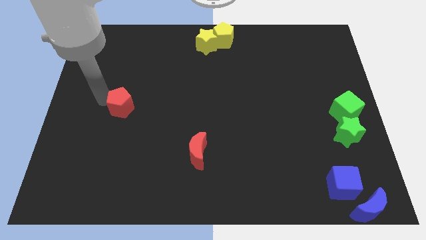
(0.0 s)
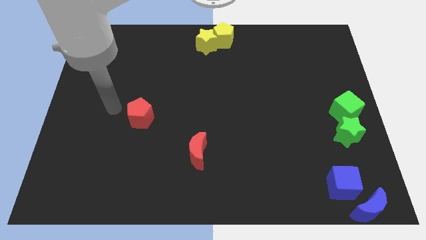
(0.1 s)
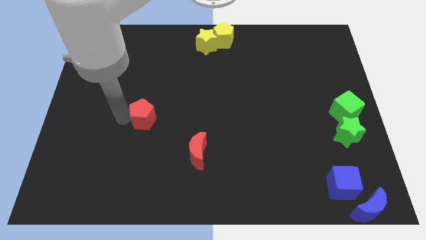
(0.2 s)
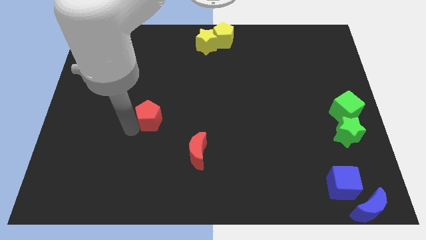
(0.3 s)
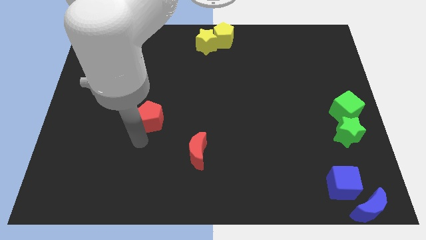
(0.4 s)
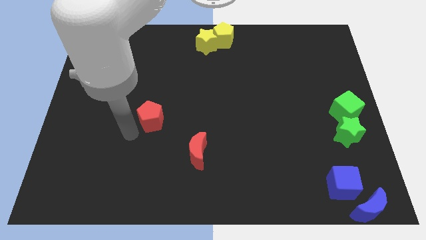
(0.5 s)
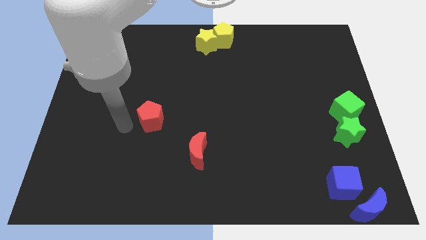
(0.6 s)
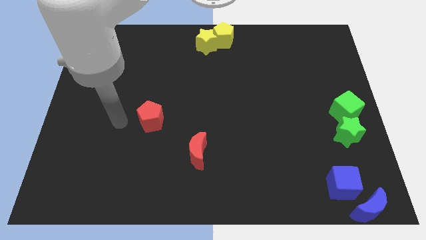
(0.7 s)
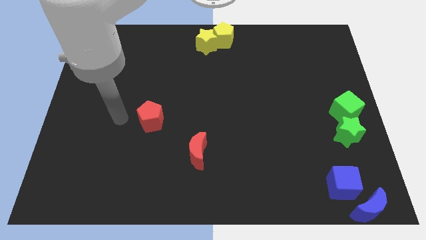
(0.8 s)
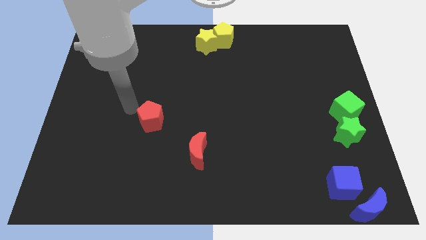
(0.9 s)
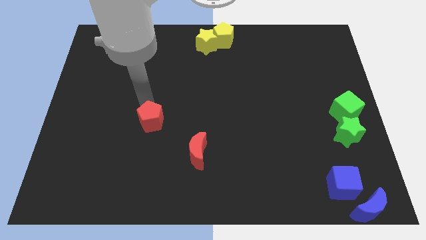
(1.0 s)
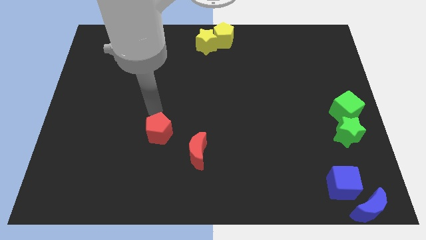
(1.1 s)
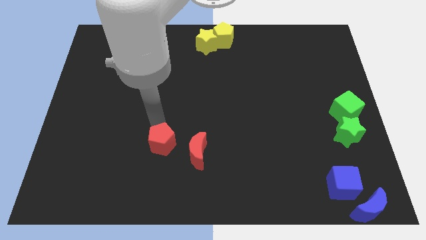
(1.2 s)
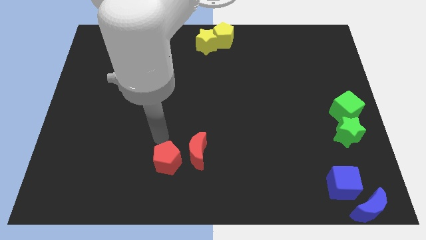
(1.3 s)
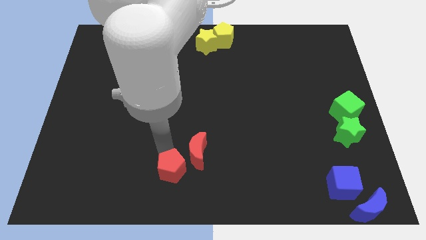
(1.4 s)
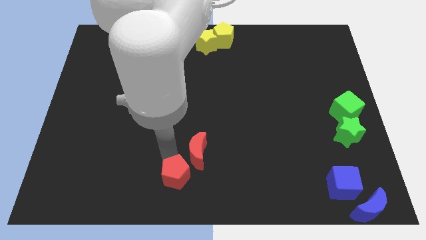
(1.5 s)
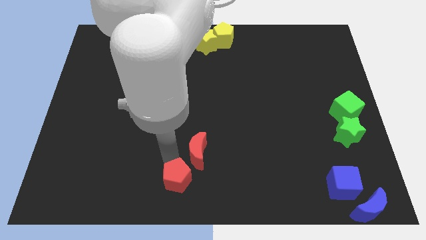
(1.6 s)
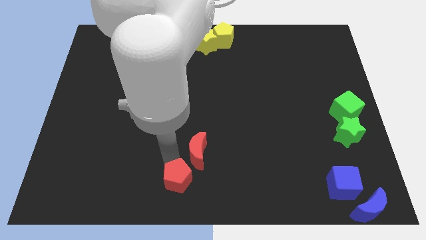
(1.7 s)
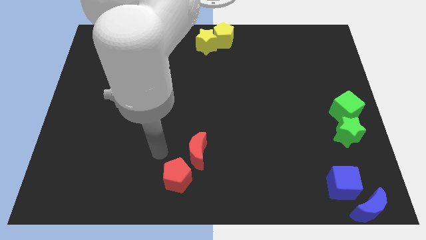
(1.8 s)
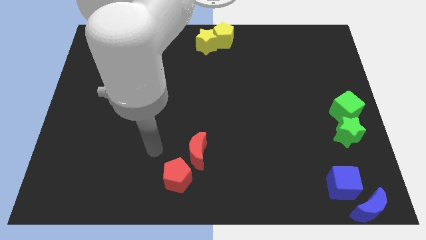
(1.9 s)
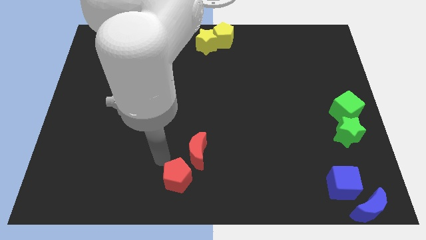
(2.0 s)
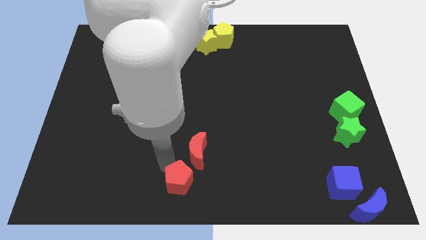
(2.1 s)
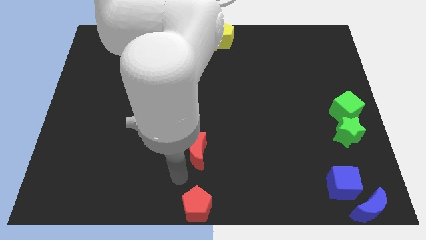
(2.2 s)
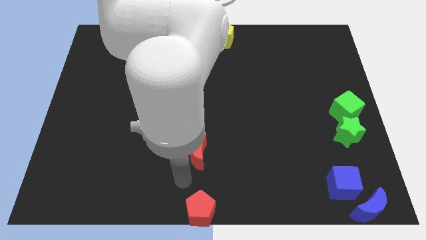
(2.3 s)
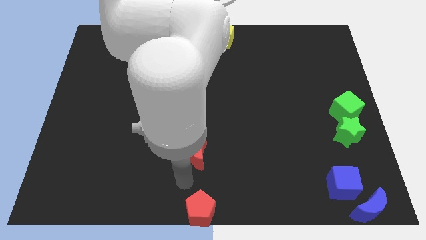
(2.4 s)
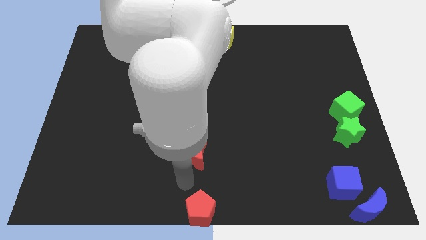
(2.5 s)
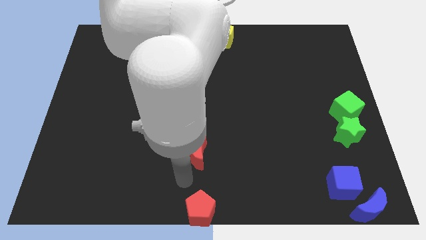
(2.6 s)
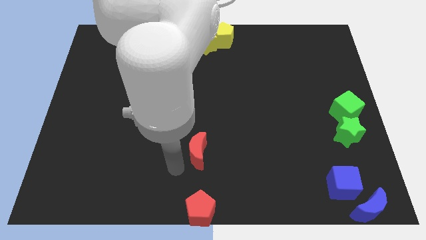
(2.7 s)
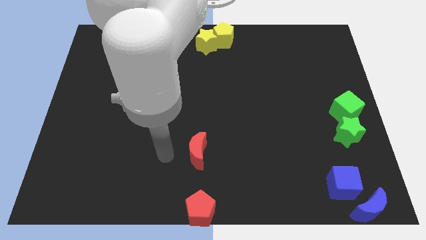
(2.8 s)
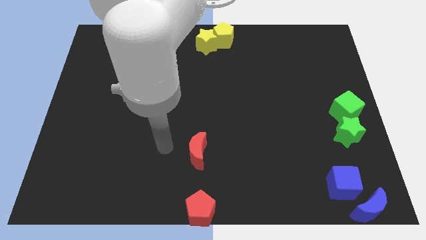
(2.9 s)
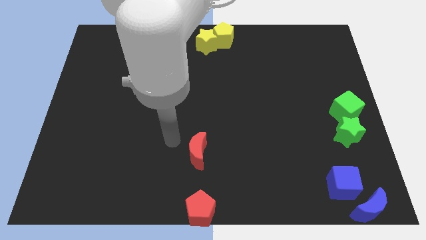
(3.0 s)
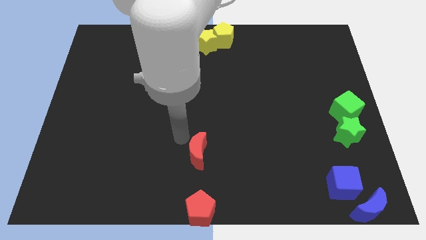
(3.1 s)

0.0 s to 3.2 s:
place red pentagon at the bottom center of the board

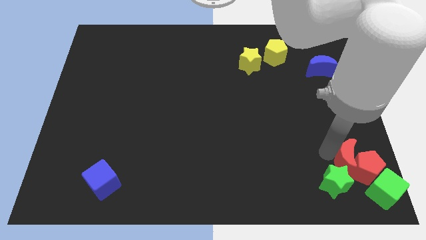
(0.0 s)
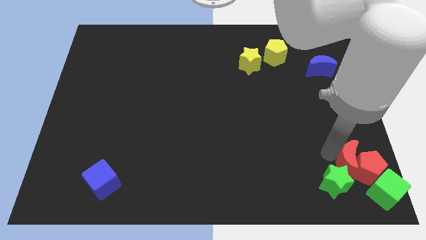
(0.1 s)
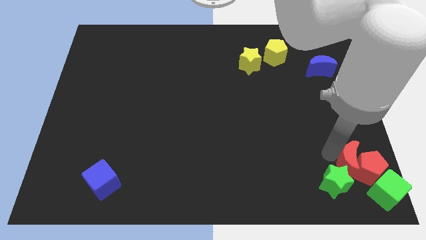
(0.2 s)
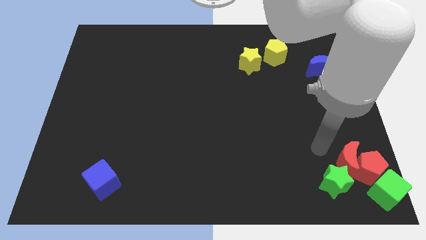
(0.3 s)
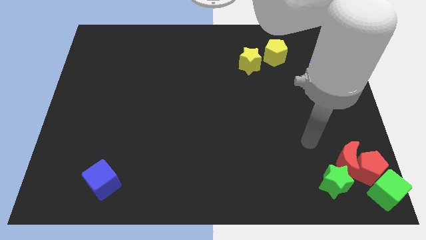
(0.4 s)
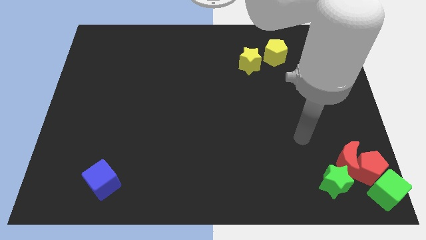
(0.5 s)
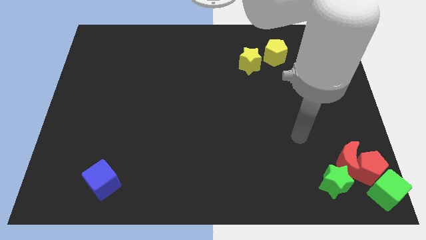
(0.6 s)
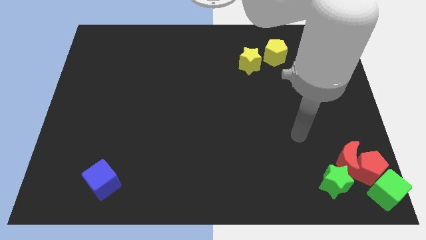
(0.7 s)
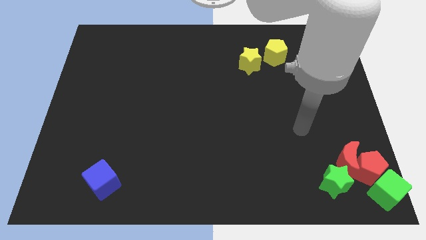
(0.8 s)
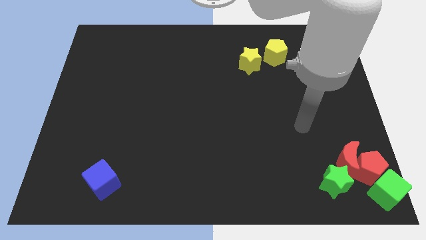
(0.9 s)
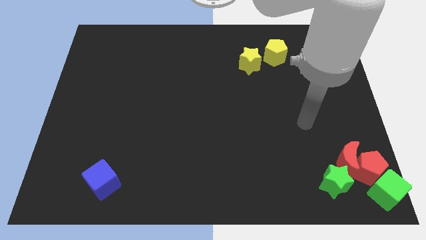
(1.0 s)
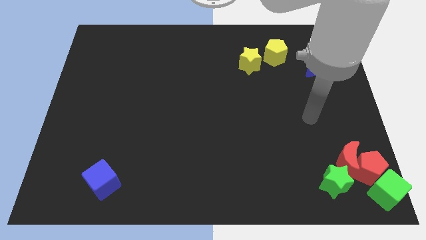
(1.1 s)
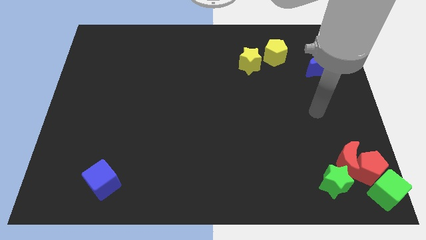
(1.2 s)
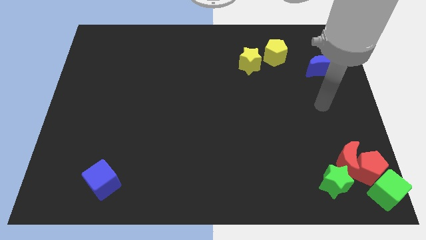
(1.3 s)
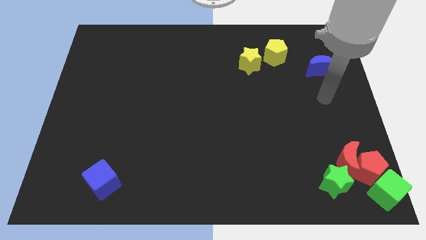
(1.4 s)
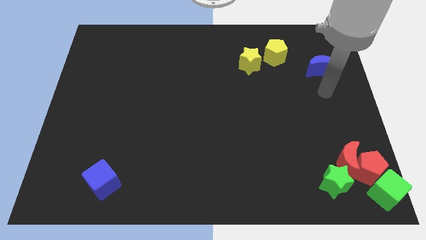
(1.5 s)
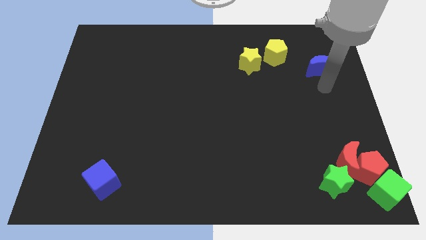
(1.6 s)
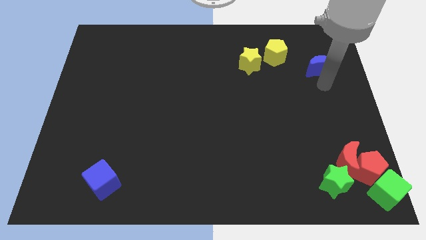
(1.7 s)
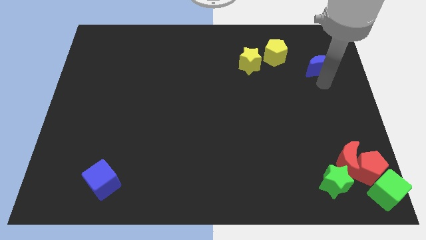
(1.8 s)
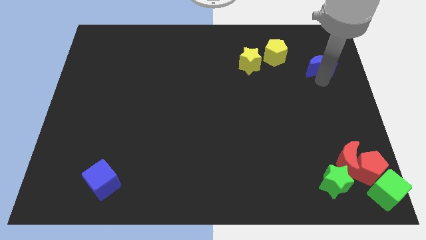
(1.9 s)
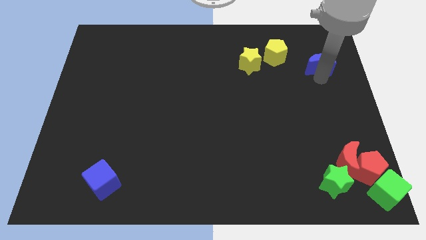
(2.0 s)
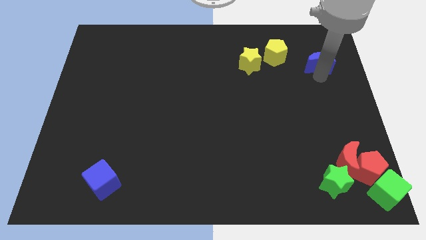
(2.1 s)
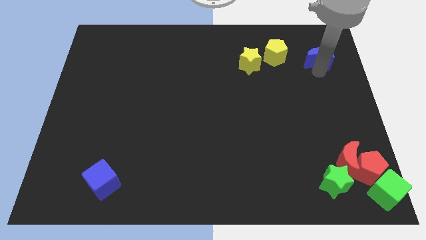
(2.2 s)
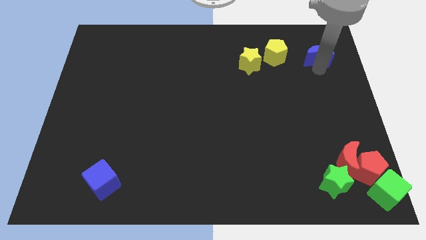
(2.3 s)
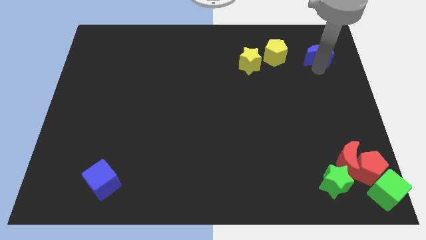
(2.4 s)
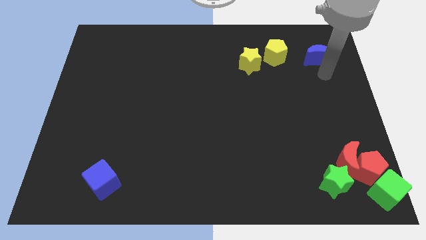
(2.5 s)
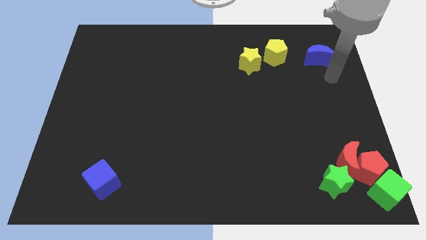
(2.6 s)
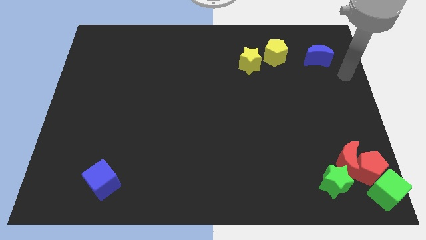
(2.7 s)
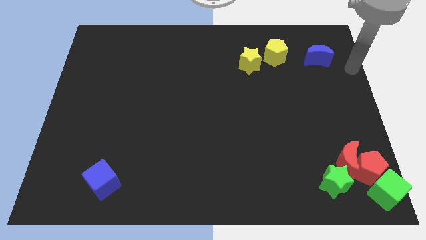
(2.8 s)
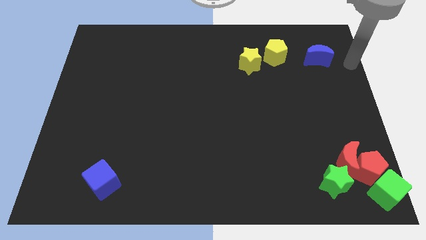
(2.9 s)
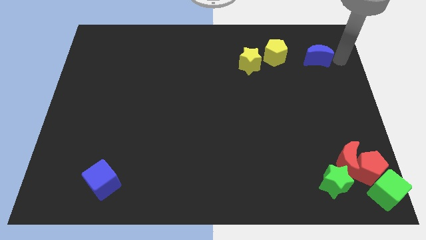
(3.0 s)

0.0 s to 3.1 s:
push the blue crescent to the up slightly

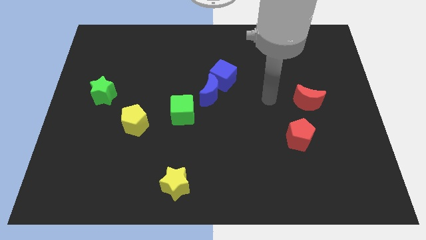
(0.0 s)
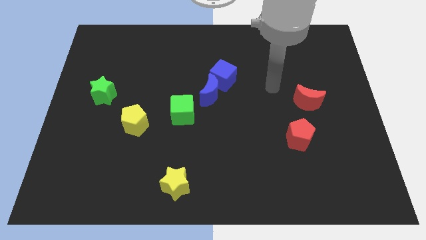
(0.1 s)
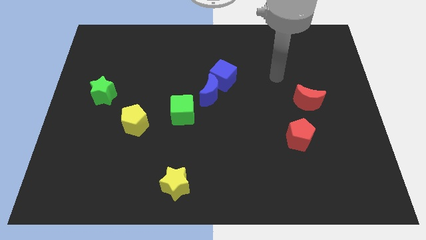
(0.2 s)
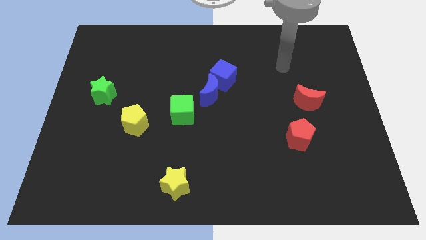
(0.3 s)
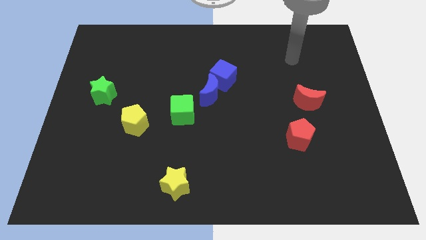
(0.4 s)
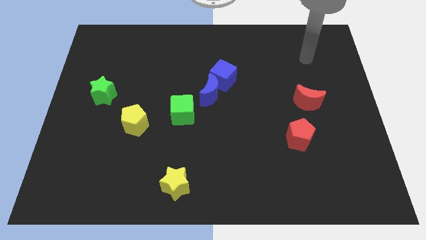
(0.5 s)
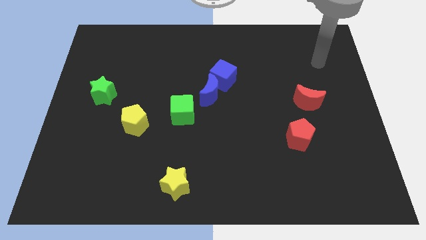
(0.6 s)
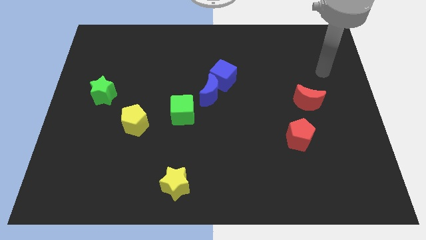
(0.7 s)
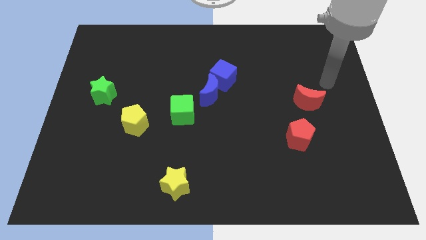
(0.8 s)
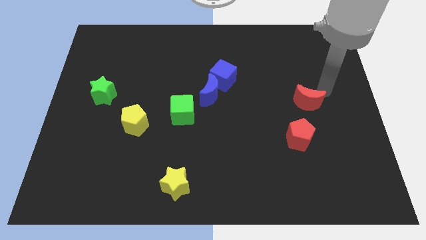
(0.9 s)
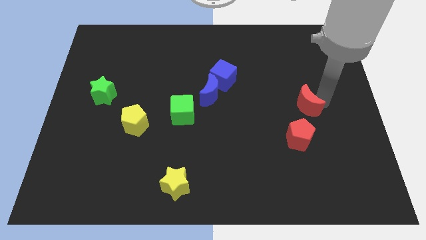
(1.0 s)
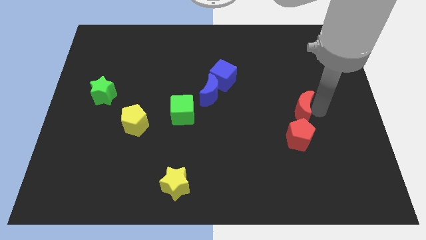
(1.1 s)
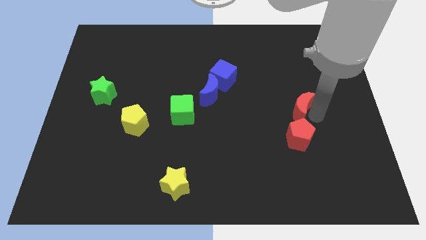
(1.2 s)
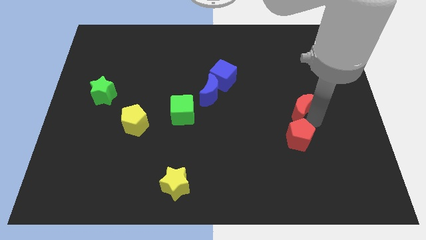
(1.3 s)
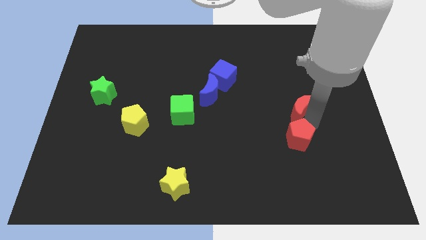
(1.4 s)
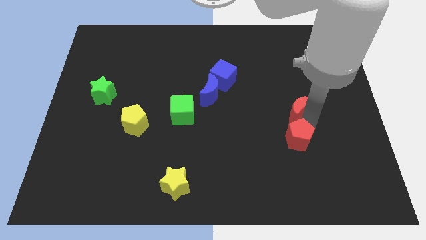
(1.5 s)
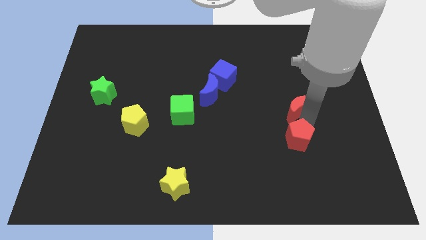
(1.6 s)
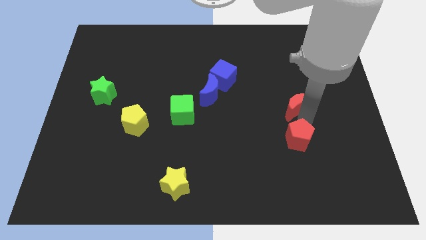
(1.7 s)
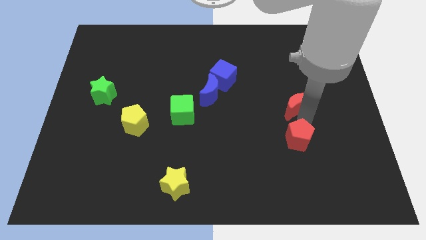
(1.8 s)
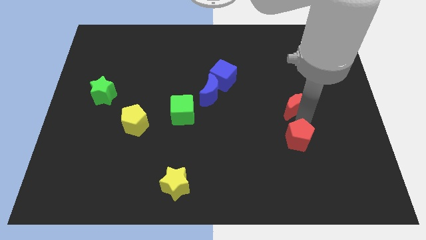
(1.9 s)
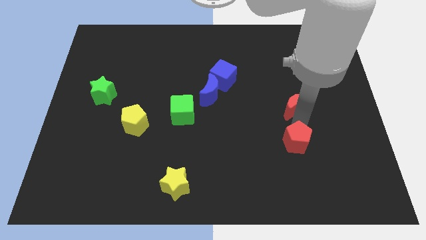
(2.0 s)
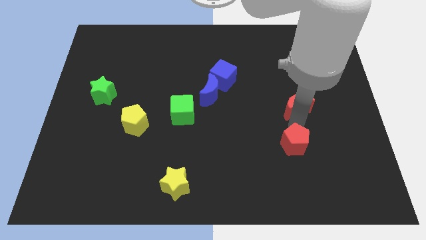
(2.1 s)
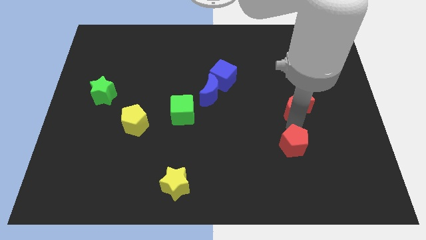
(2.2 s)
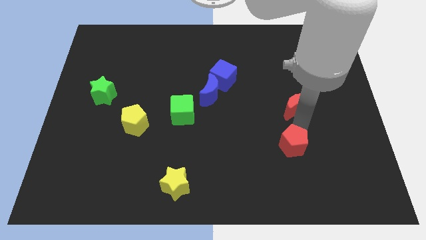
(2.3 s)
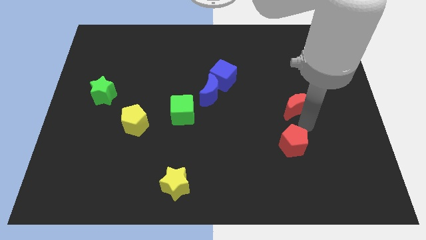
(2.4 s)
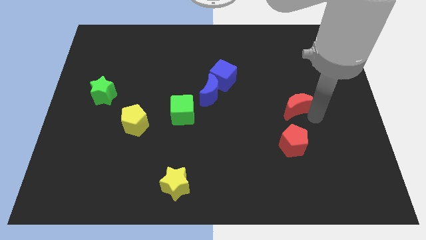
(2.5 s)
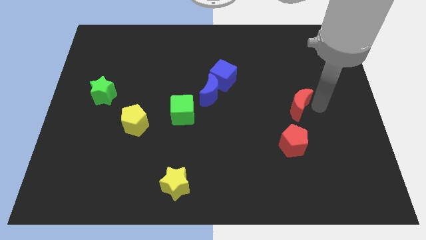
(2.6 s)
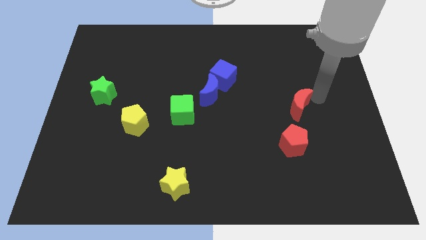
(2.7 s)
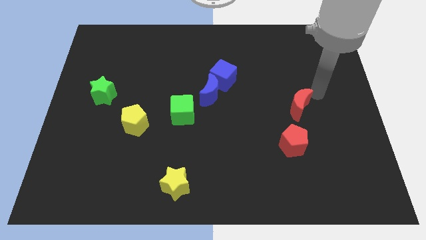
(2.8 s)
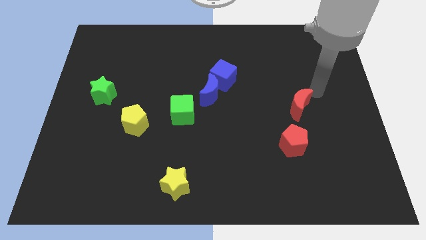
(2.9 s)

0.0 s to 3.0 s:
move the red moon above the red pentagon
